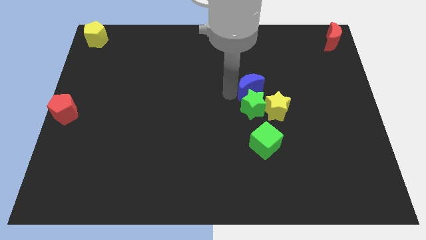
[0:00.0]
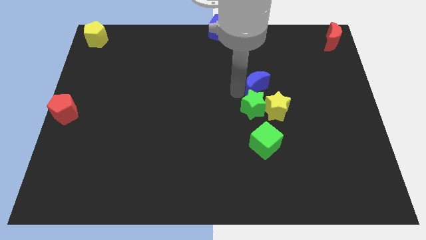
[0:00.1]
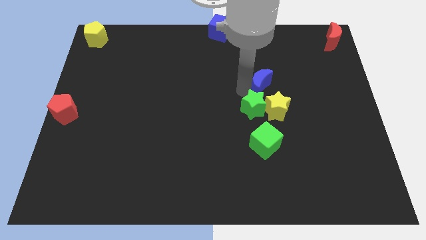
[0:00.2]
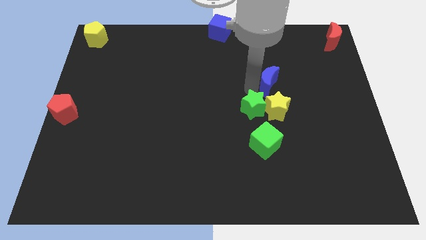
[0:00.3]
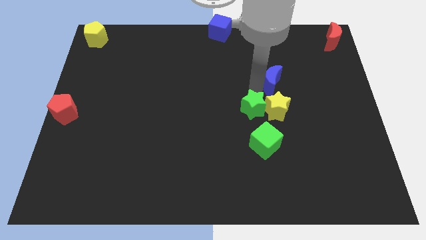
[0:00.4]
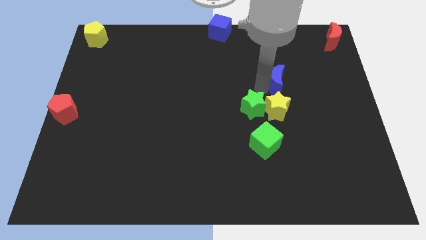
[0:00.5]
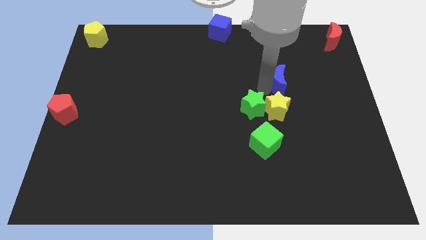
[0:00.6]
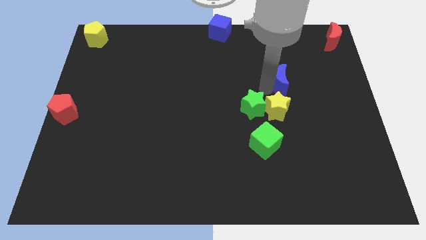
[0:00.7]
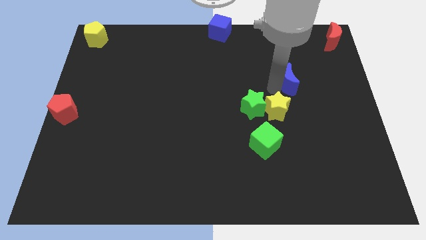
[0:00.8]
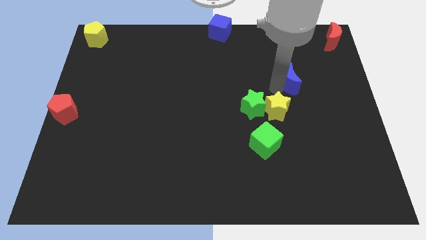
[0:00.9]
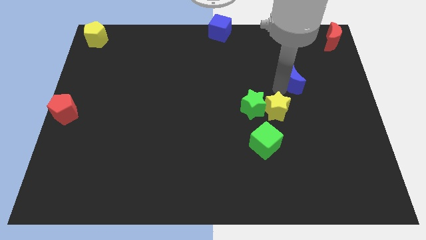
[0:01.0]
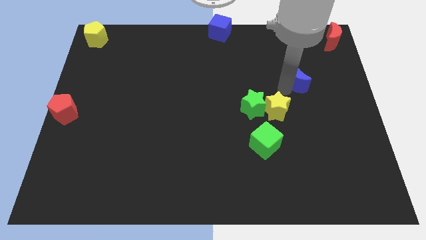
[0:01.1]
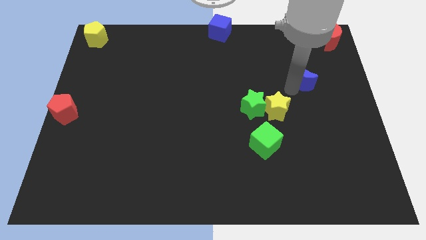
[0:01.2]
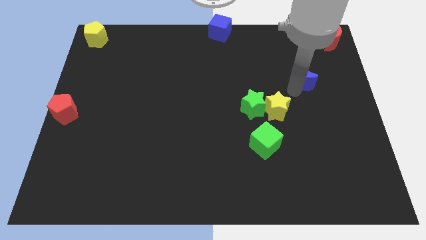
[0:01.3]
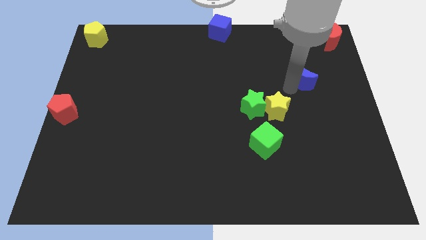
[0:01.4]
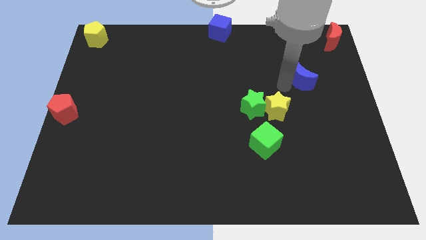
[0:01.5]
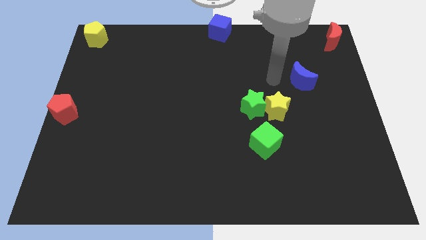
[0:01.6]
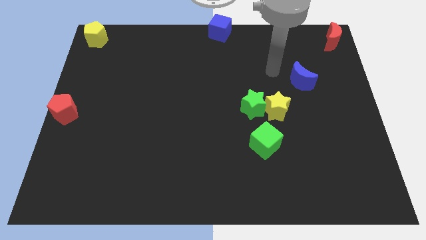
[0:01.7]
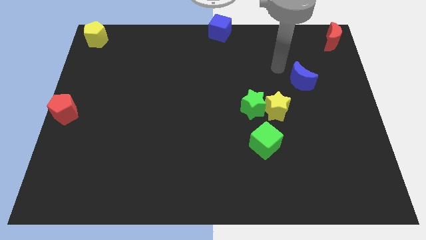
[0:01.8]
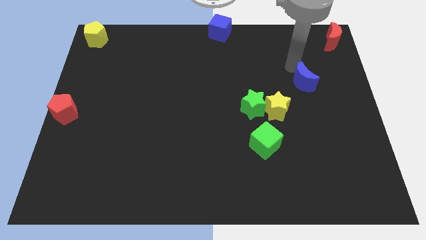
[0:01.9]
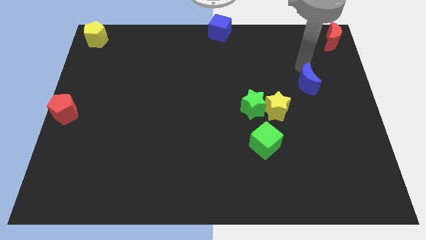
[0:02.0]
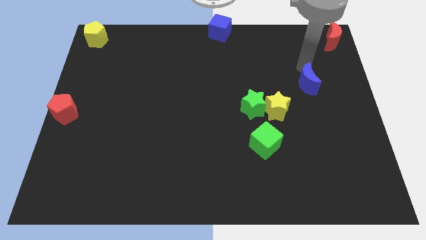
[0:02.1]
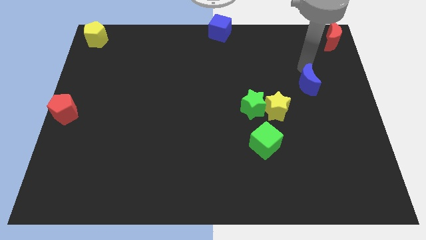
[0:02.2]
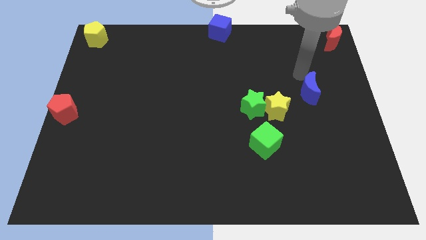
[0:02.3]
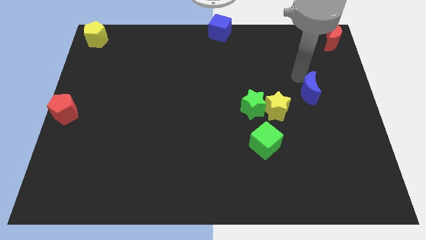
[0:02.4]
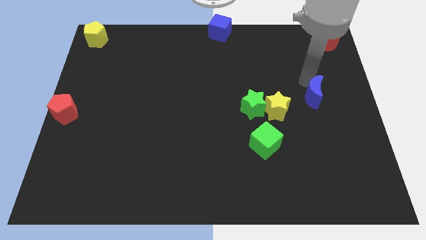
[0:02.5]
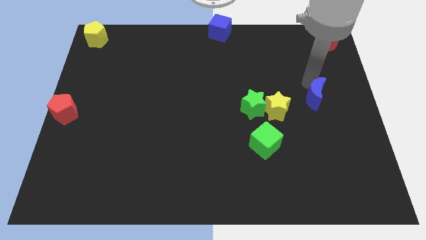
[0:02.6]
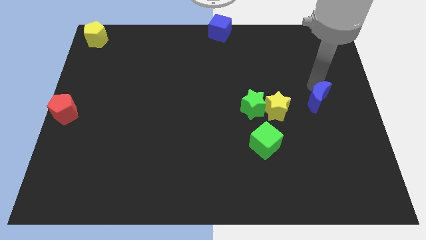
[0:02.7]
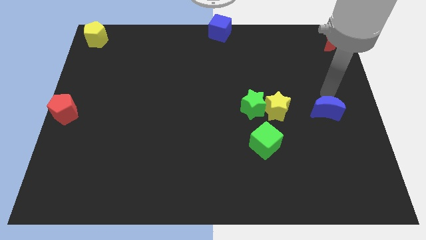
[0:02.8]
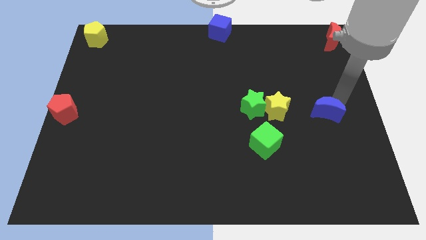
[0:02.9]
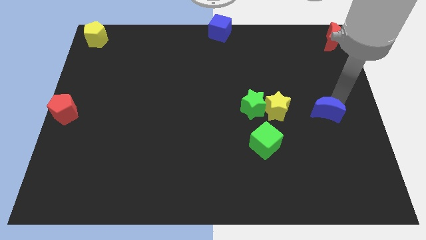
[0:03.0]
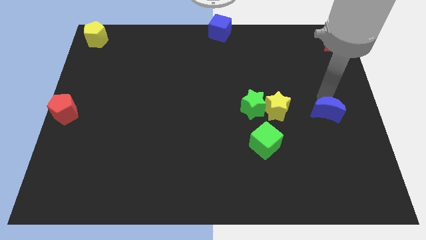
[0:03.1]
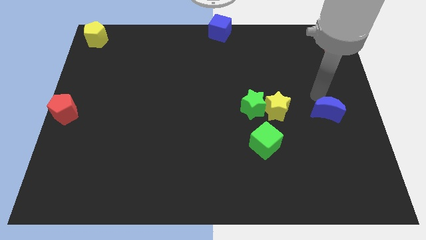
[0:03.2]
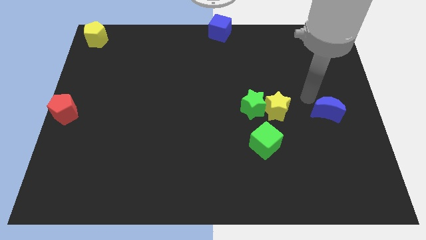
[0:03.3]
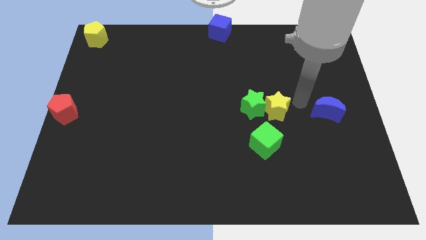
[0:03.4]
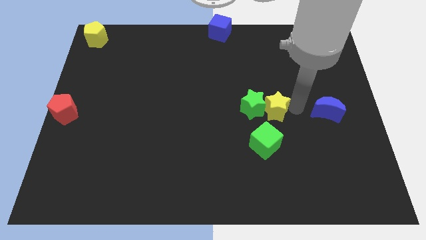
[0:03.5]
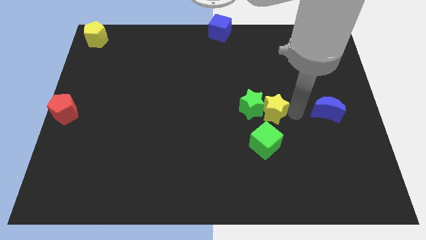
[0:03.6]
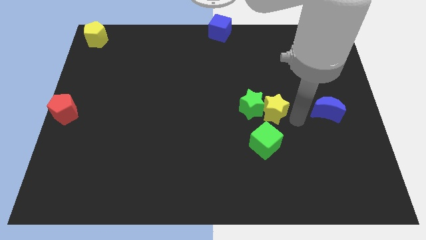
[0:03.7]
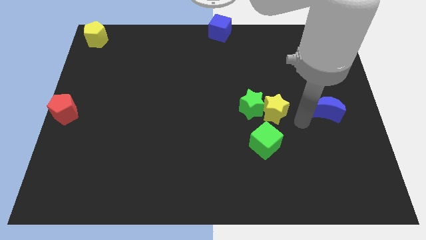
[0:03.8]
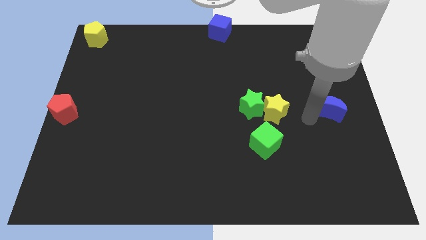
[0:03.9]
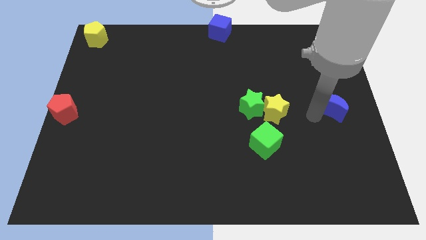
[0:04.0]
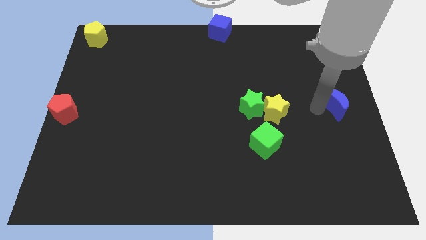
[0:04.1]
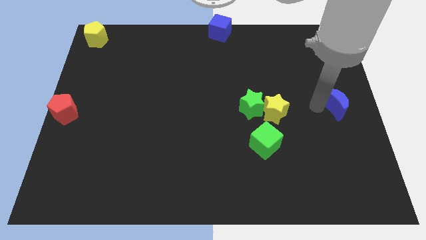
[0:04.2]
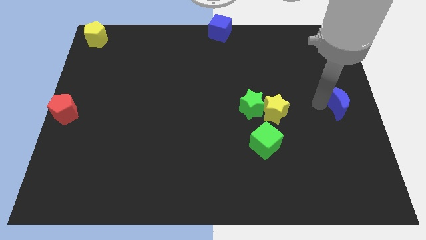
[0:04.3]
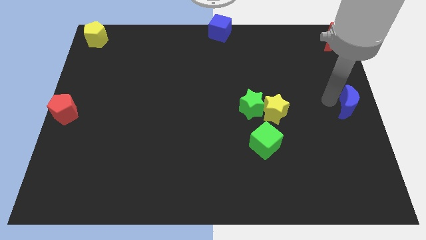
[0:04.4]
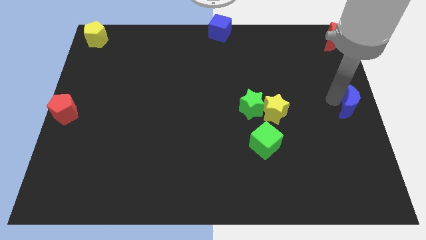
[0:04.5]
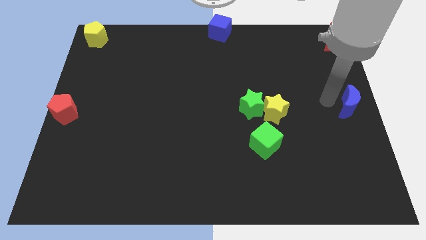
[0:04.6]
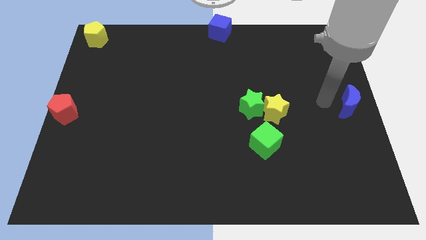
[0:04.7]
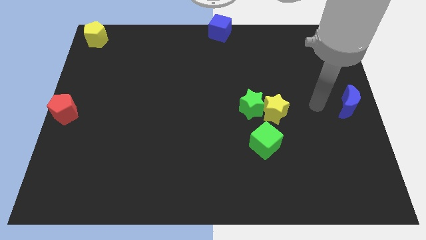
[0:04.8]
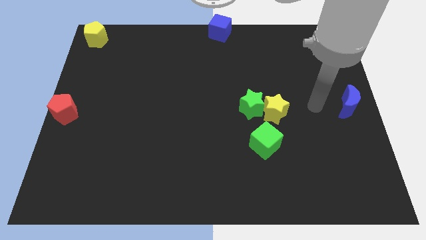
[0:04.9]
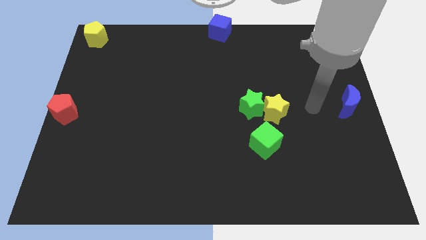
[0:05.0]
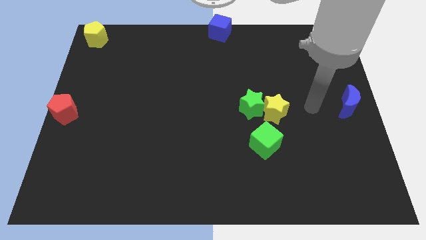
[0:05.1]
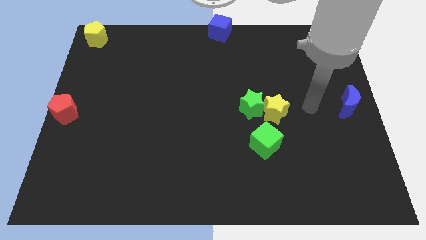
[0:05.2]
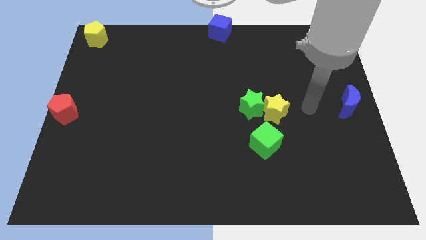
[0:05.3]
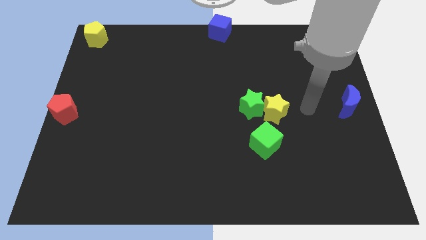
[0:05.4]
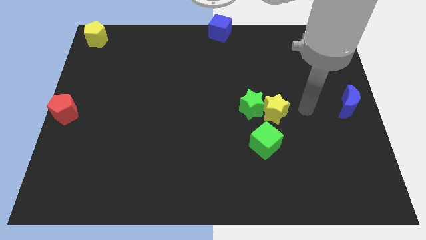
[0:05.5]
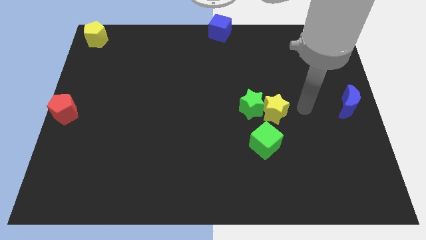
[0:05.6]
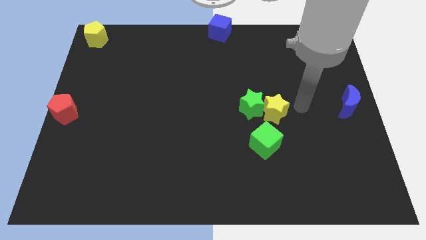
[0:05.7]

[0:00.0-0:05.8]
push the blue crescent to the right center of the board

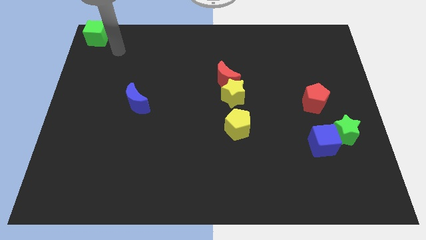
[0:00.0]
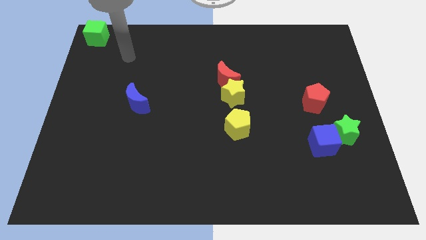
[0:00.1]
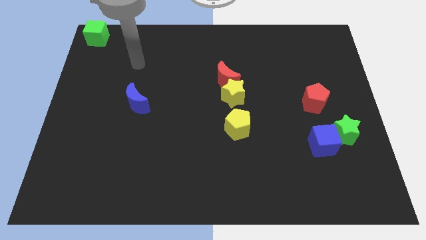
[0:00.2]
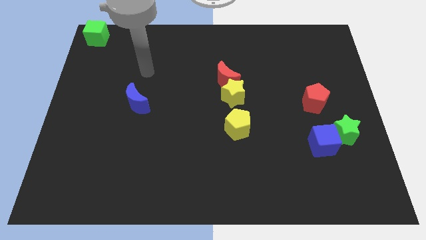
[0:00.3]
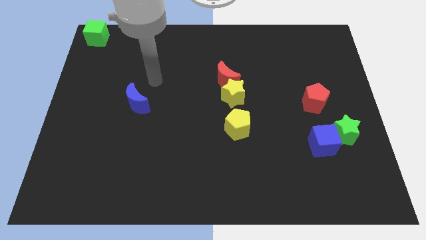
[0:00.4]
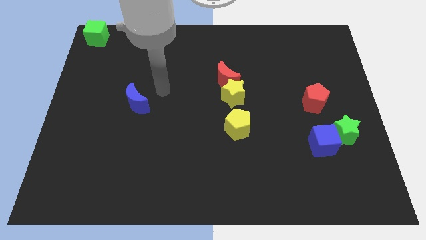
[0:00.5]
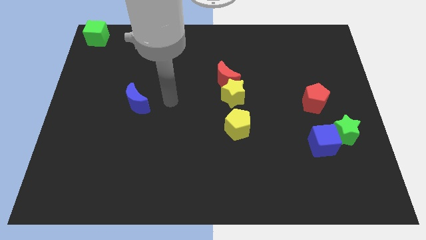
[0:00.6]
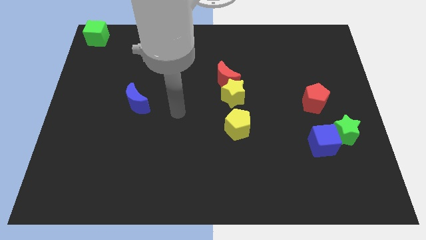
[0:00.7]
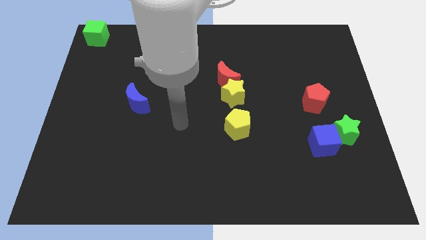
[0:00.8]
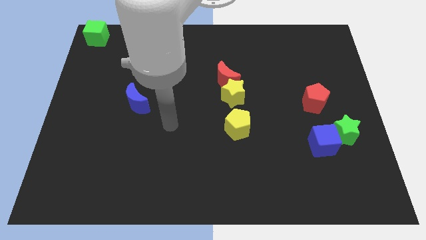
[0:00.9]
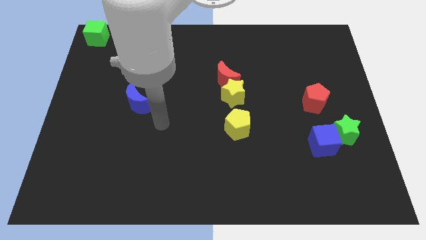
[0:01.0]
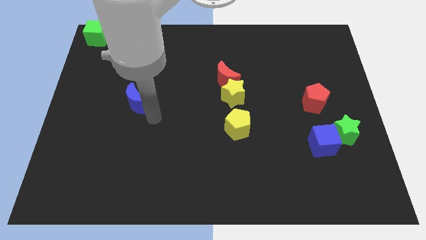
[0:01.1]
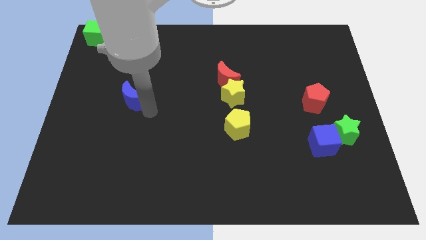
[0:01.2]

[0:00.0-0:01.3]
tap the blue crescent

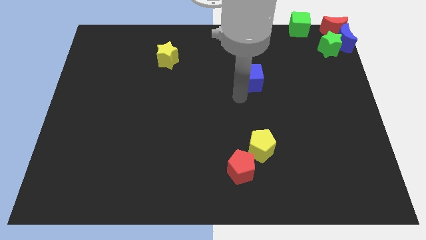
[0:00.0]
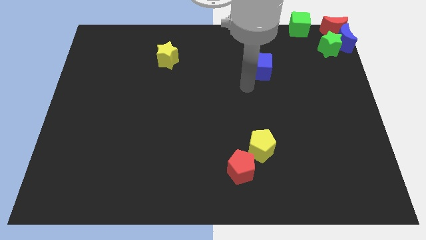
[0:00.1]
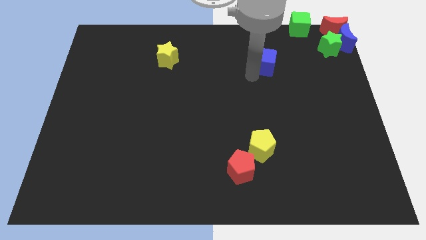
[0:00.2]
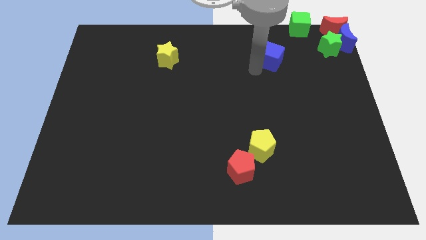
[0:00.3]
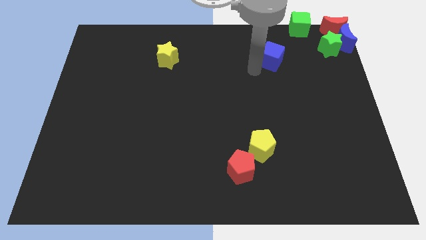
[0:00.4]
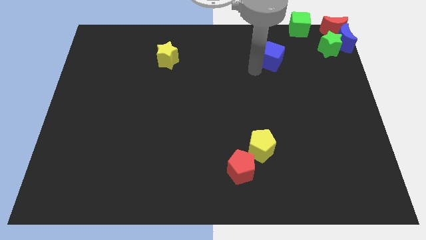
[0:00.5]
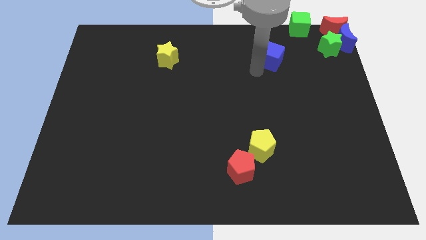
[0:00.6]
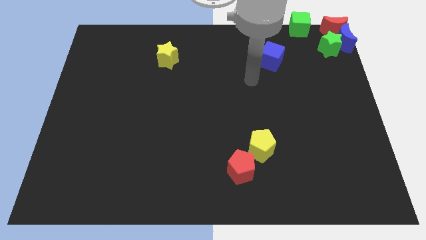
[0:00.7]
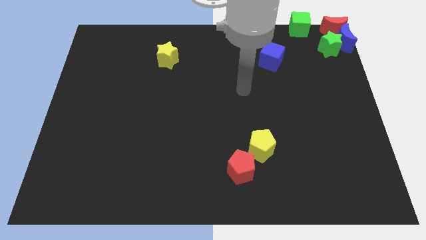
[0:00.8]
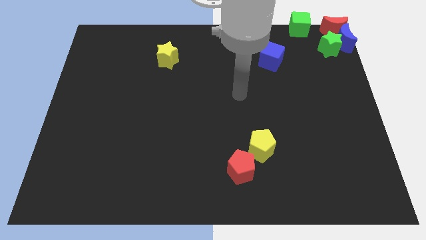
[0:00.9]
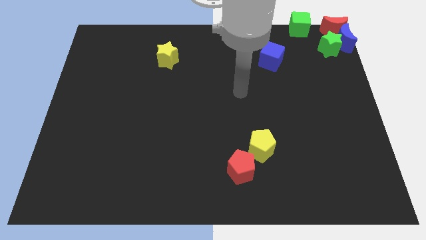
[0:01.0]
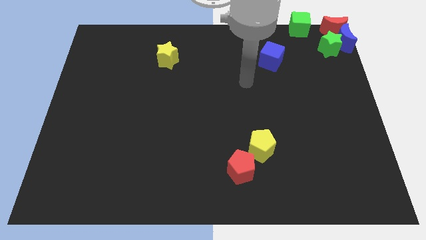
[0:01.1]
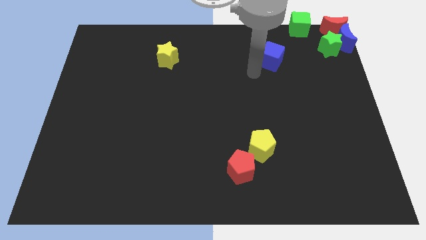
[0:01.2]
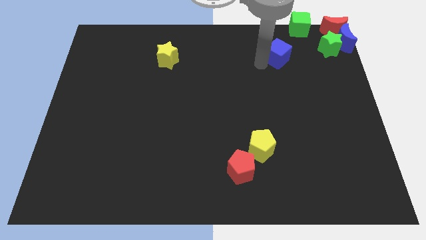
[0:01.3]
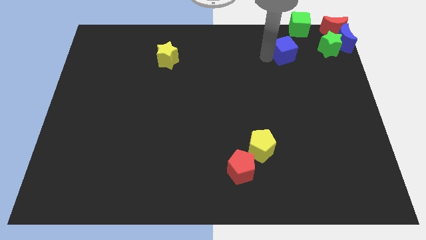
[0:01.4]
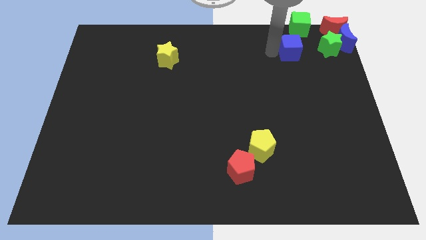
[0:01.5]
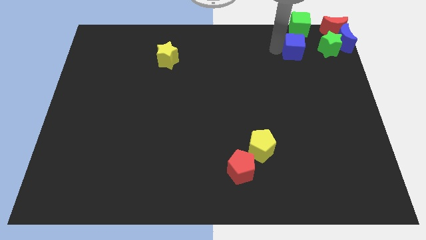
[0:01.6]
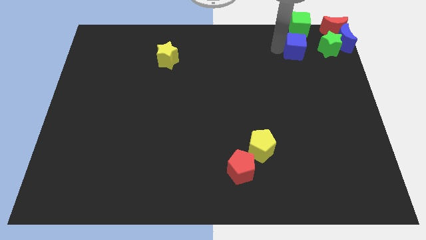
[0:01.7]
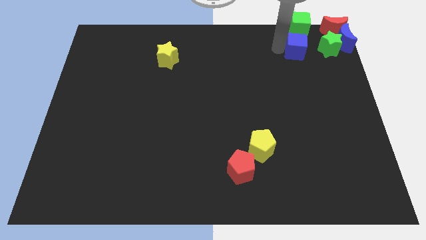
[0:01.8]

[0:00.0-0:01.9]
drag the blue cube diagonally top right to the yellow pentagon
